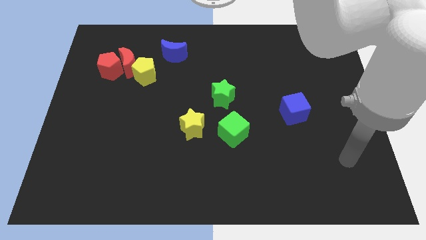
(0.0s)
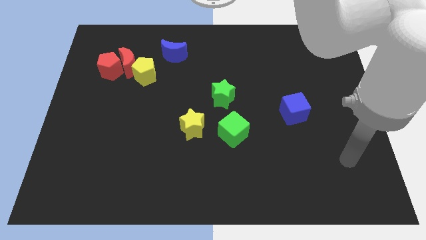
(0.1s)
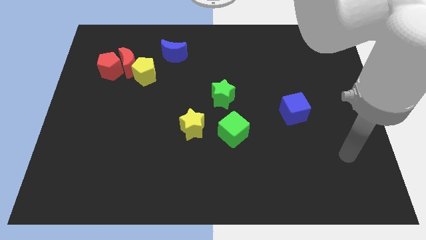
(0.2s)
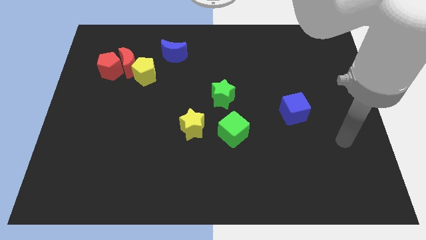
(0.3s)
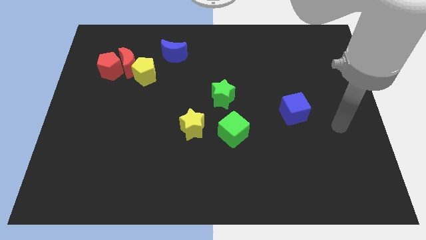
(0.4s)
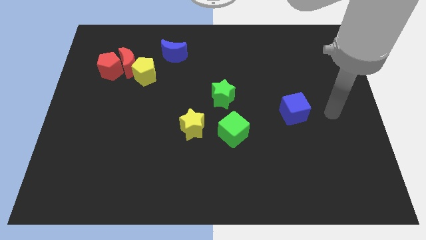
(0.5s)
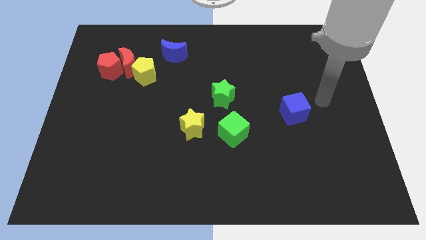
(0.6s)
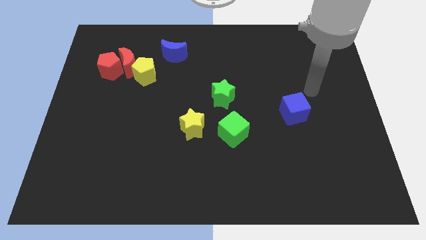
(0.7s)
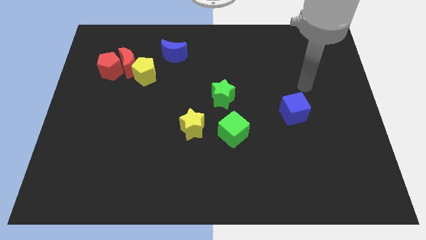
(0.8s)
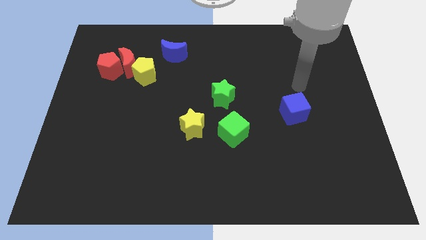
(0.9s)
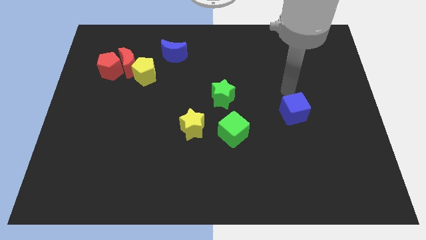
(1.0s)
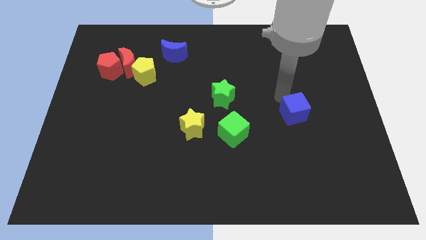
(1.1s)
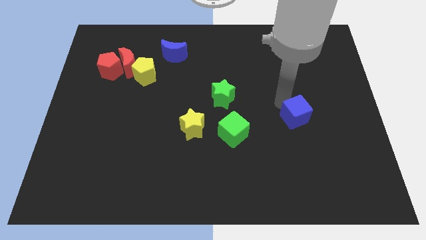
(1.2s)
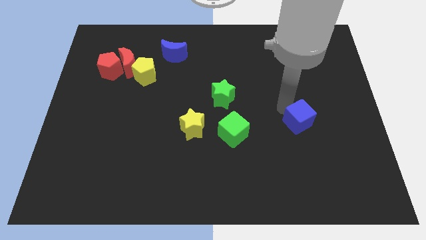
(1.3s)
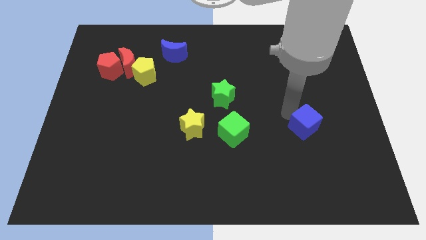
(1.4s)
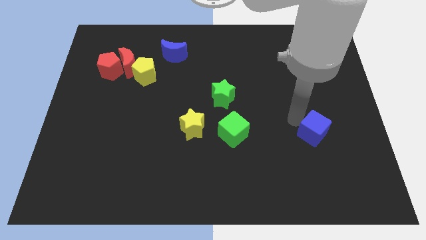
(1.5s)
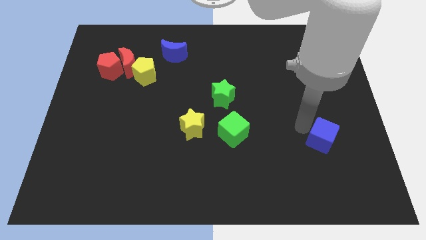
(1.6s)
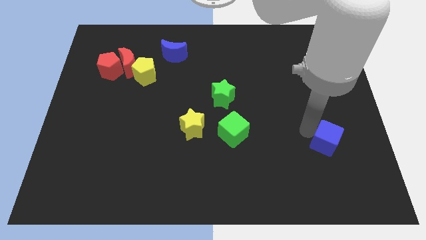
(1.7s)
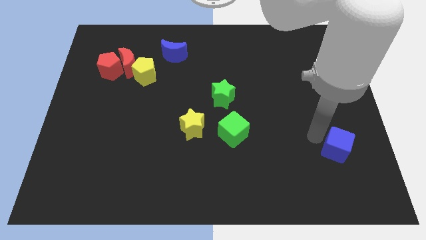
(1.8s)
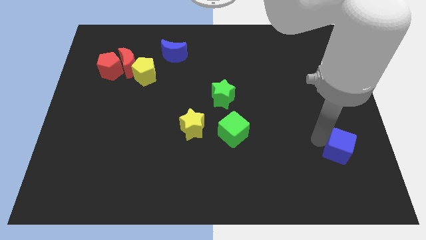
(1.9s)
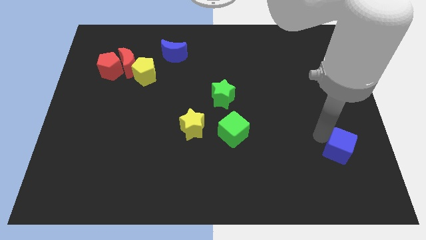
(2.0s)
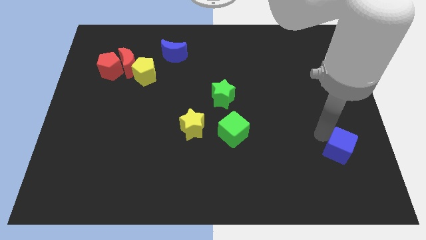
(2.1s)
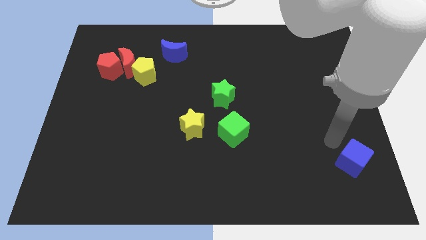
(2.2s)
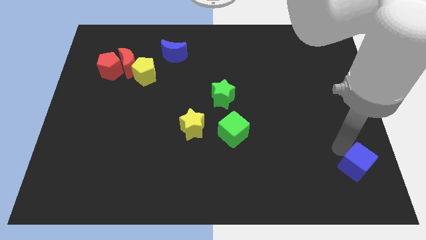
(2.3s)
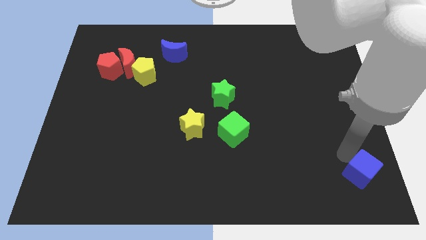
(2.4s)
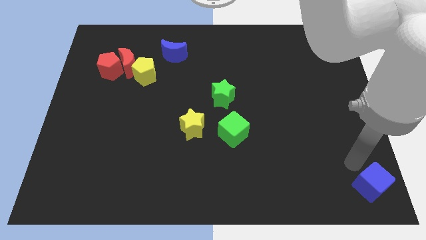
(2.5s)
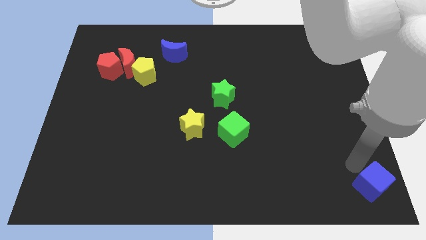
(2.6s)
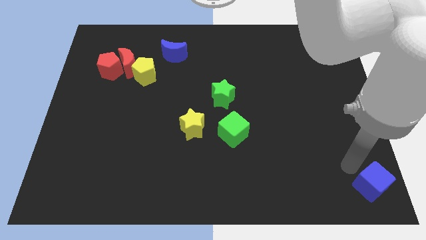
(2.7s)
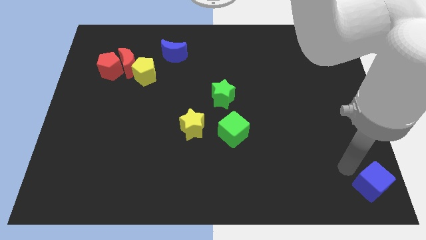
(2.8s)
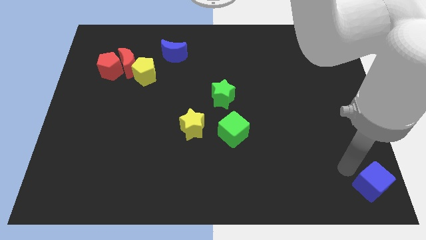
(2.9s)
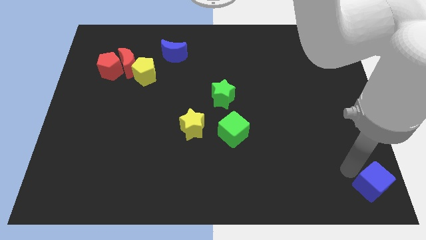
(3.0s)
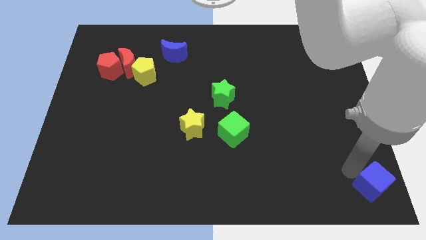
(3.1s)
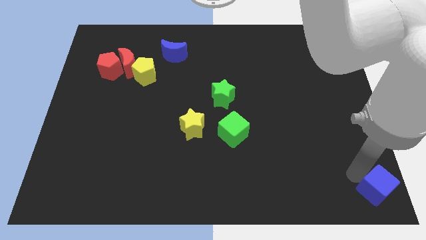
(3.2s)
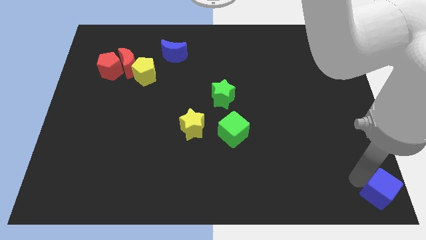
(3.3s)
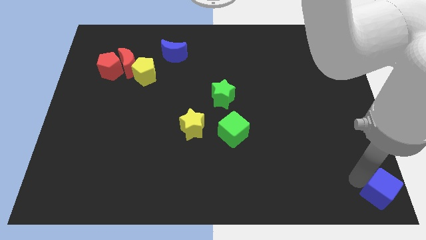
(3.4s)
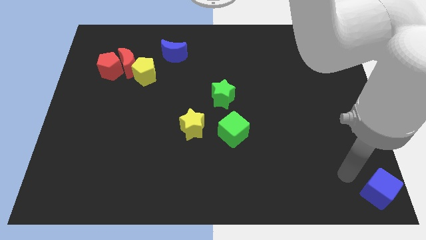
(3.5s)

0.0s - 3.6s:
push the blue cube to the bottom right corner of the board

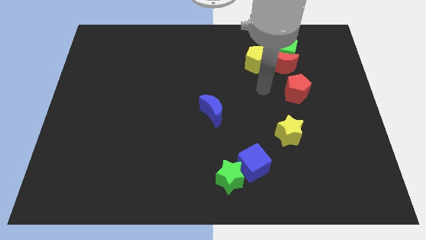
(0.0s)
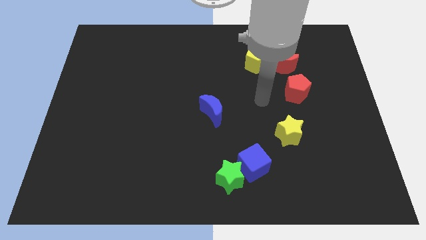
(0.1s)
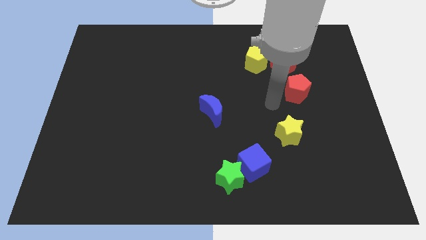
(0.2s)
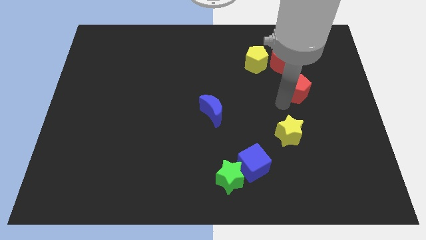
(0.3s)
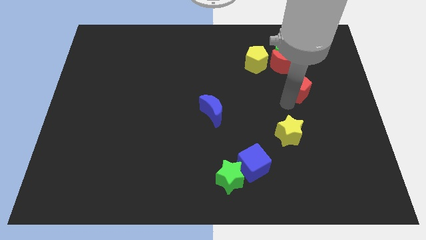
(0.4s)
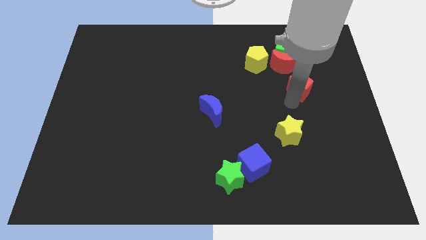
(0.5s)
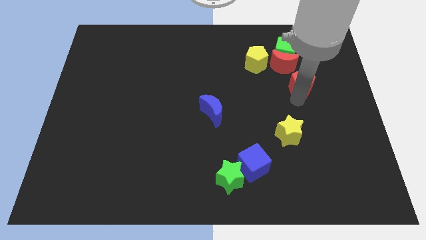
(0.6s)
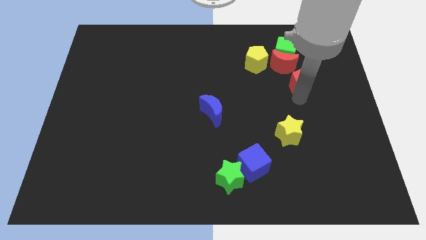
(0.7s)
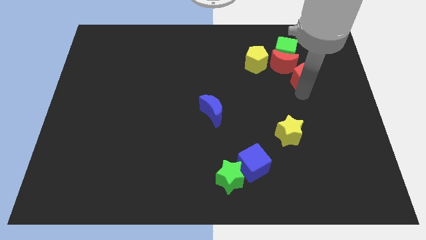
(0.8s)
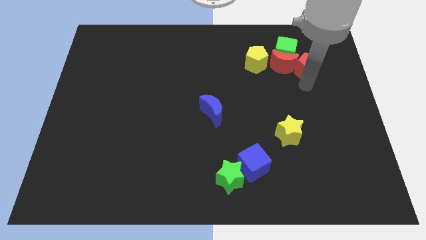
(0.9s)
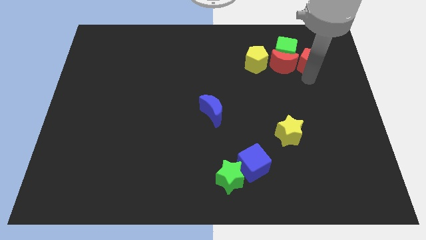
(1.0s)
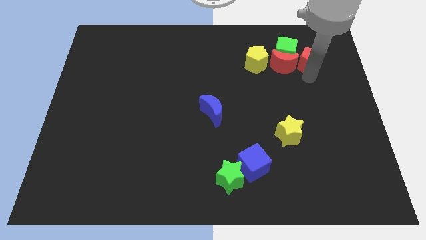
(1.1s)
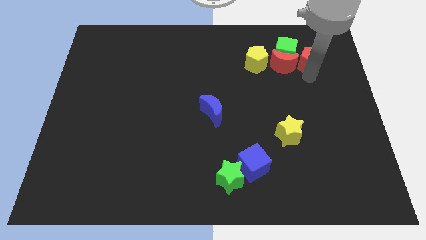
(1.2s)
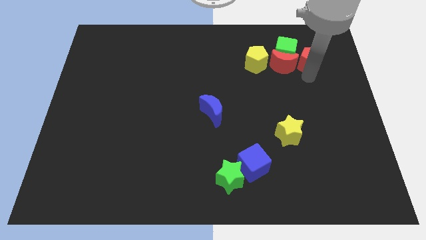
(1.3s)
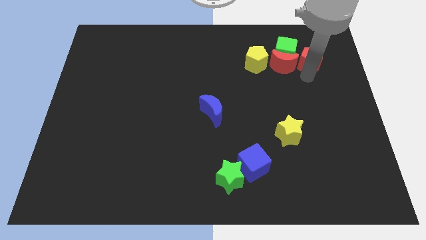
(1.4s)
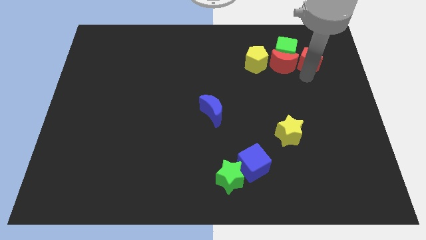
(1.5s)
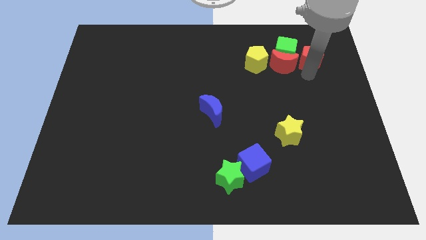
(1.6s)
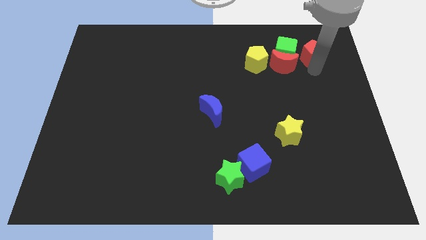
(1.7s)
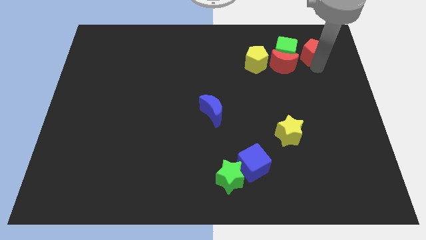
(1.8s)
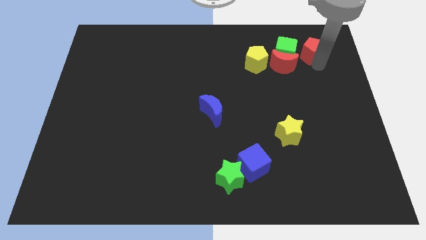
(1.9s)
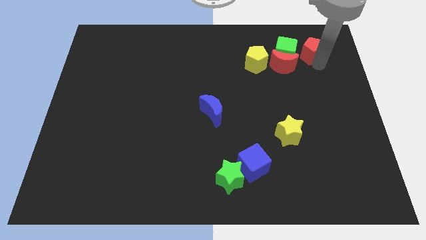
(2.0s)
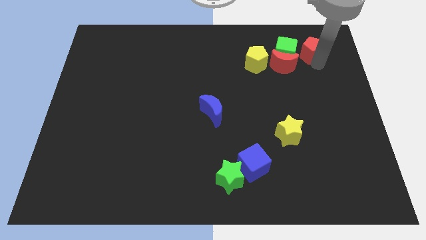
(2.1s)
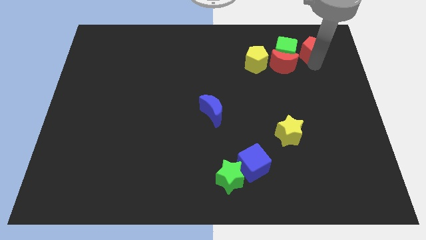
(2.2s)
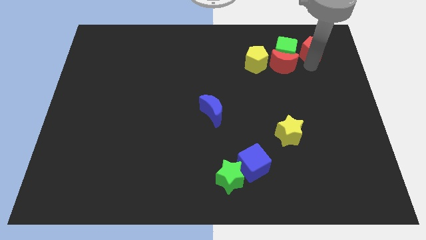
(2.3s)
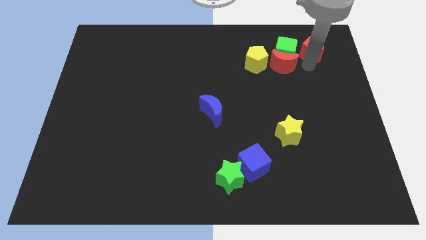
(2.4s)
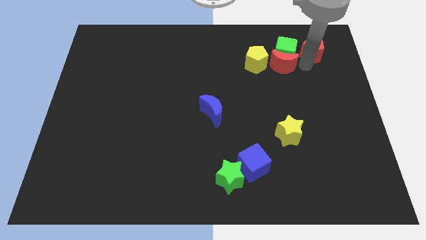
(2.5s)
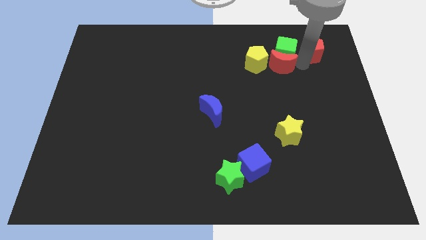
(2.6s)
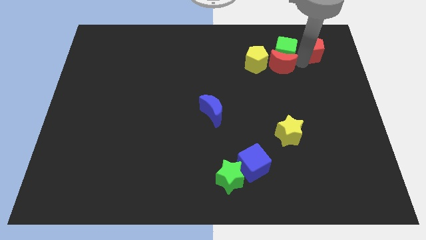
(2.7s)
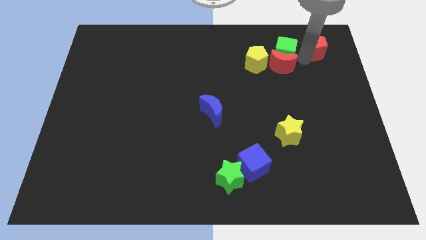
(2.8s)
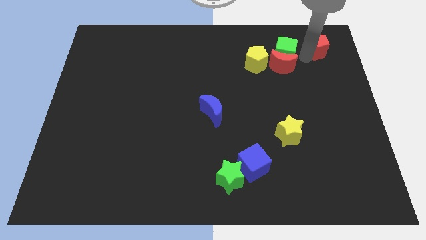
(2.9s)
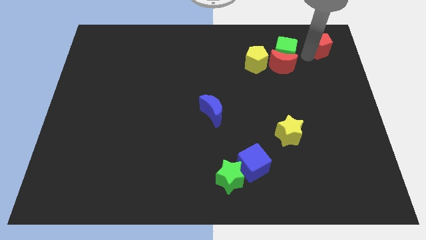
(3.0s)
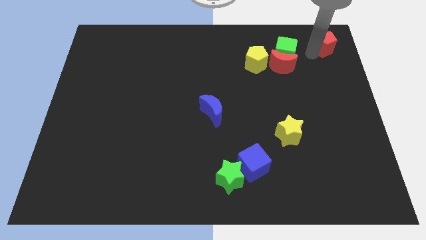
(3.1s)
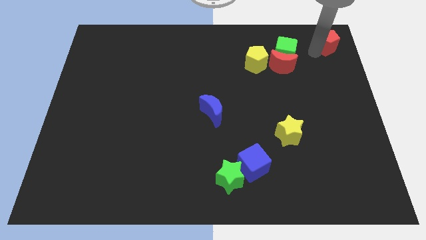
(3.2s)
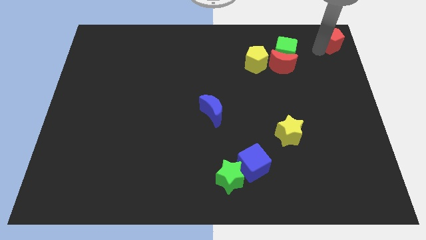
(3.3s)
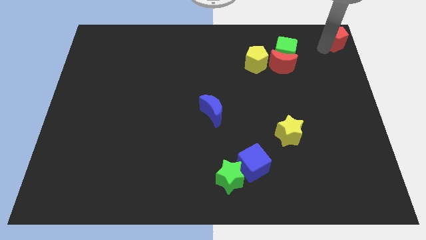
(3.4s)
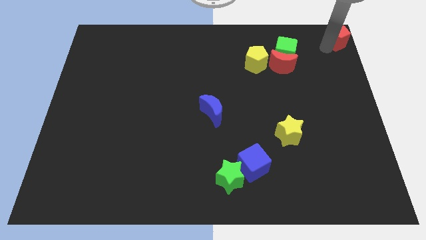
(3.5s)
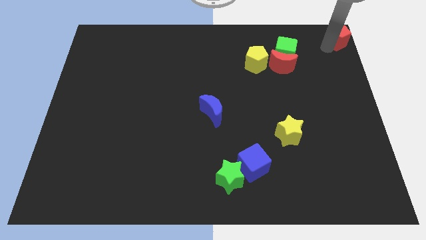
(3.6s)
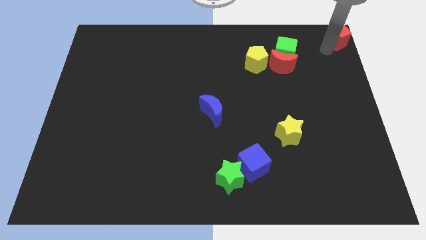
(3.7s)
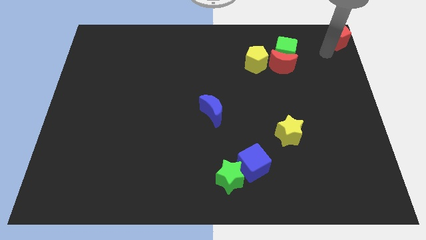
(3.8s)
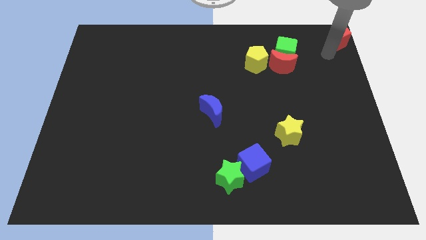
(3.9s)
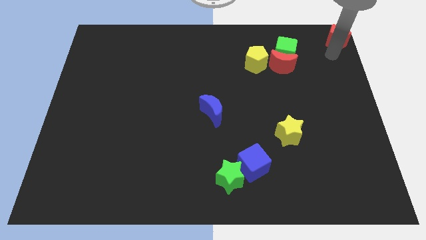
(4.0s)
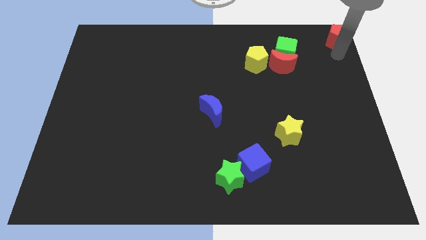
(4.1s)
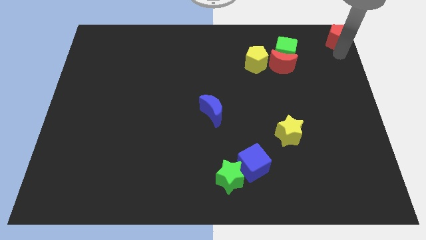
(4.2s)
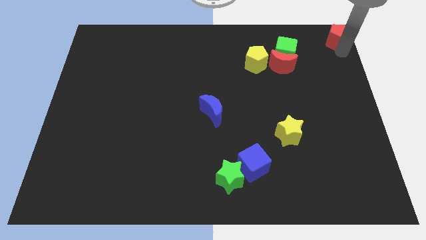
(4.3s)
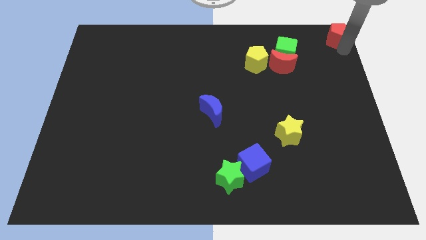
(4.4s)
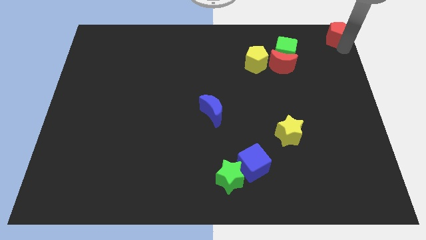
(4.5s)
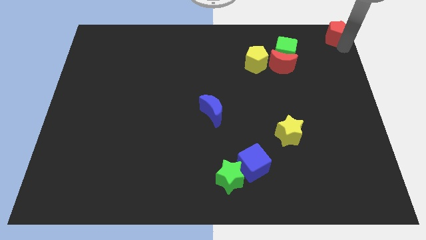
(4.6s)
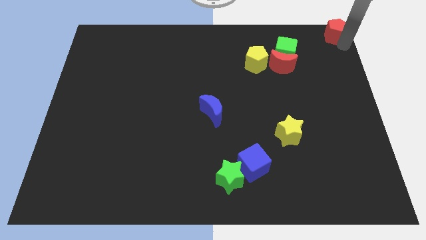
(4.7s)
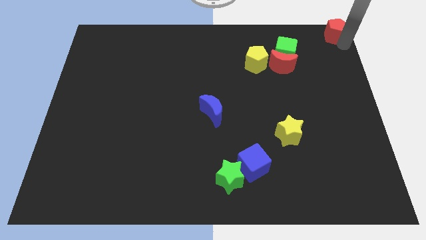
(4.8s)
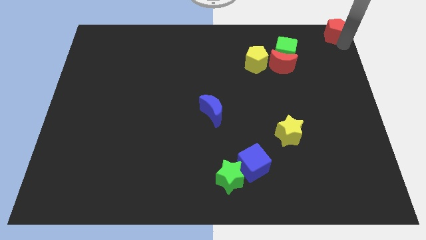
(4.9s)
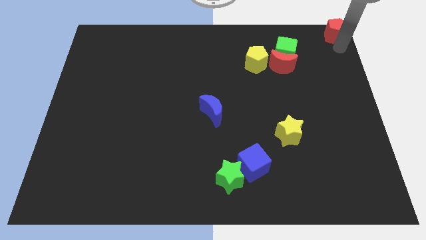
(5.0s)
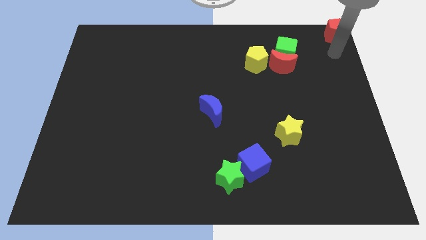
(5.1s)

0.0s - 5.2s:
place the red pentagon at the top right corner of the board

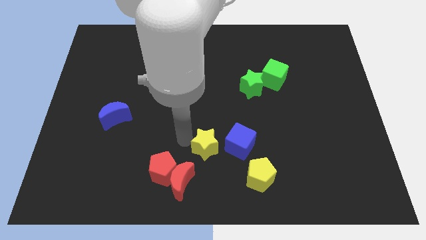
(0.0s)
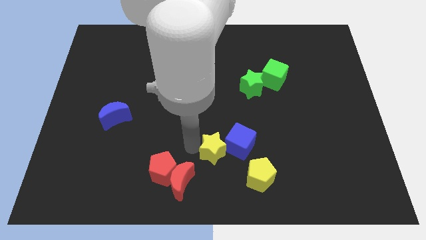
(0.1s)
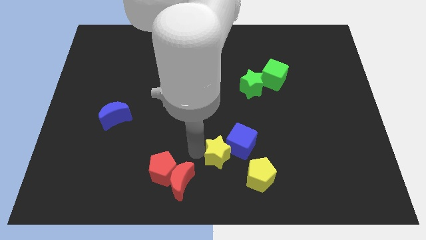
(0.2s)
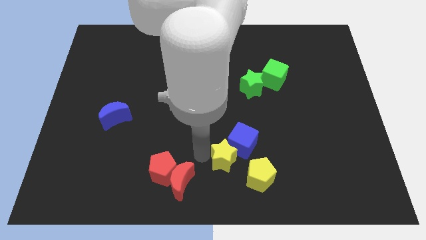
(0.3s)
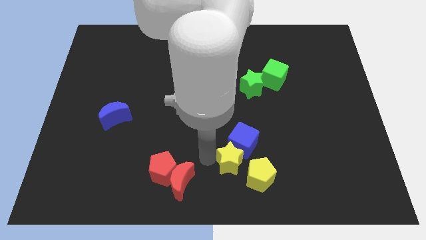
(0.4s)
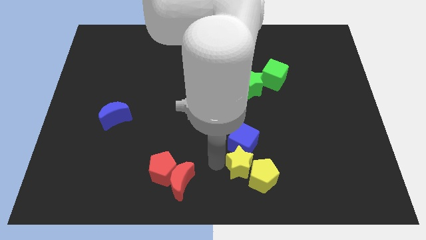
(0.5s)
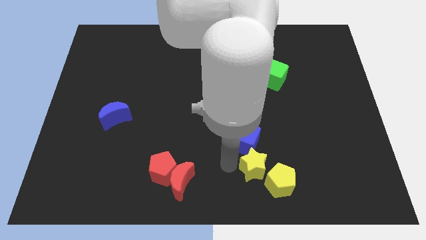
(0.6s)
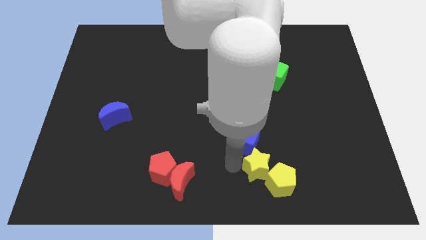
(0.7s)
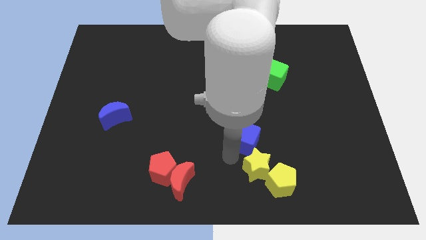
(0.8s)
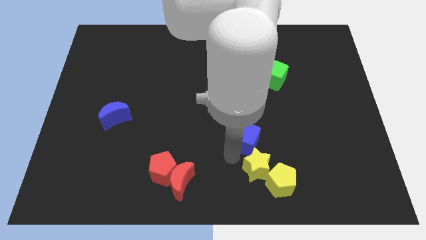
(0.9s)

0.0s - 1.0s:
push the yellow star into the yellow pentagon
